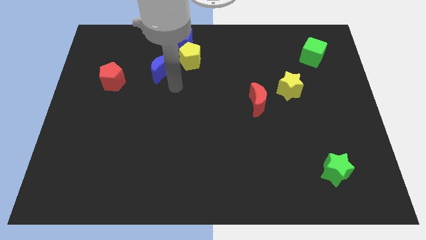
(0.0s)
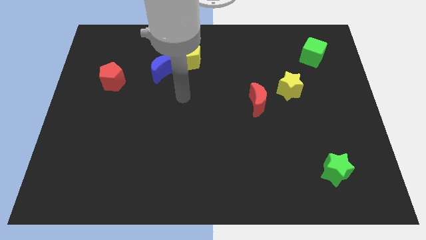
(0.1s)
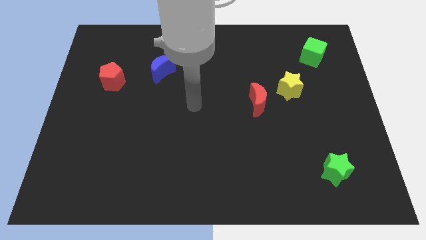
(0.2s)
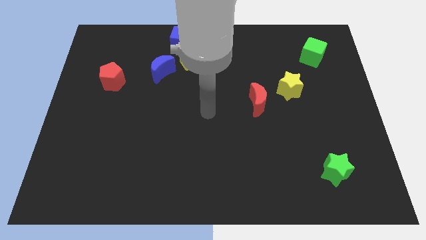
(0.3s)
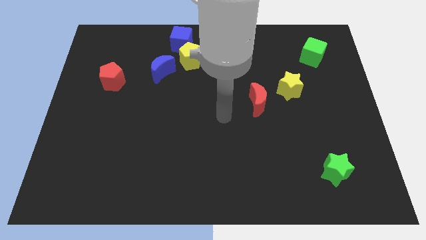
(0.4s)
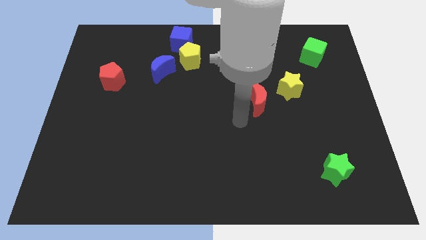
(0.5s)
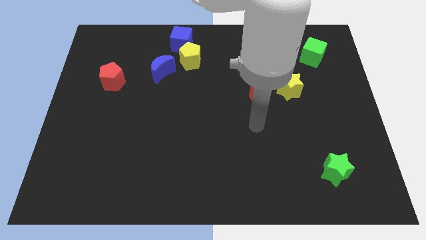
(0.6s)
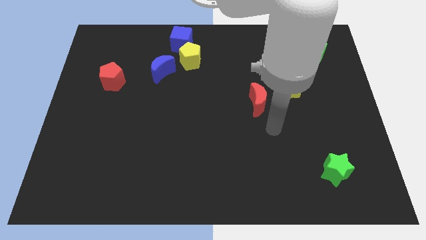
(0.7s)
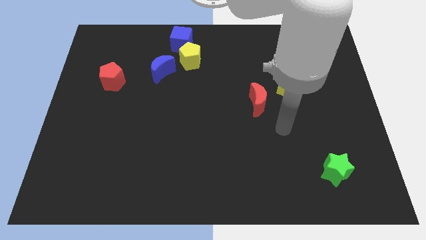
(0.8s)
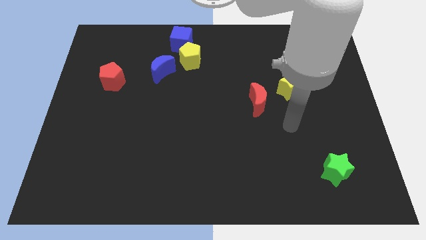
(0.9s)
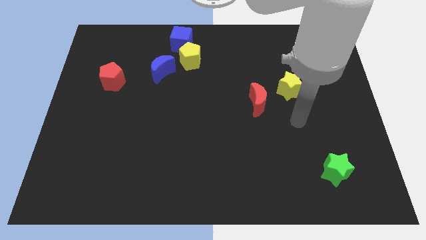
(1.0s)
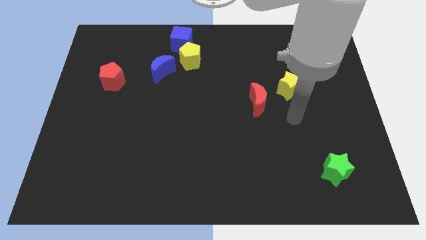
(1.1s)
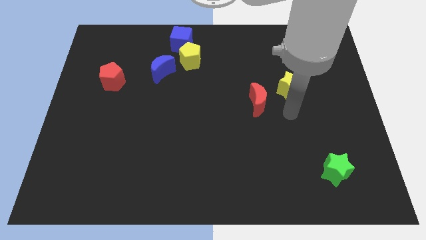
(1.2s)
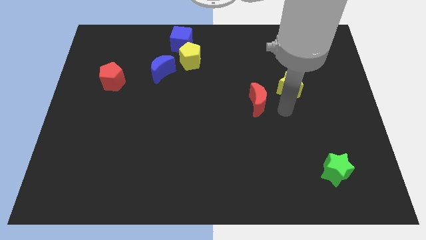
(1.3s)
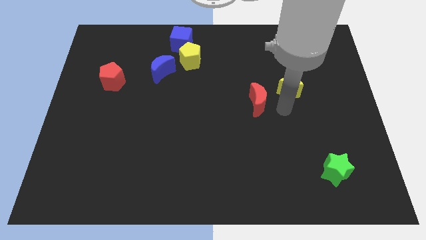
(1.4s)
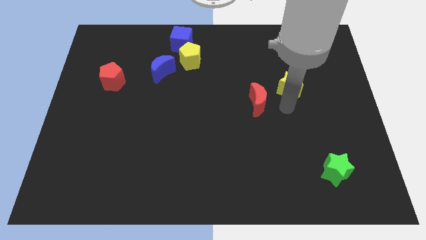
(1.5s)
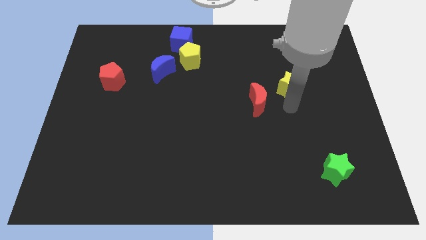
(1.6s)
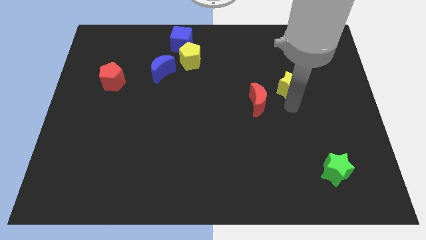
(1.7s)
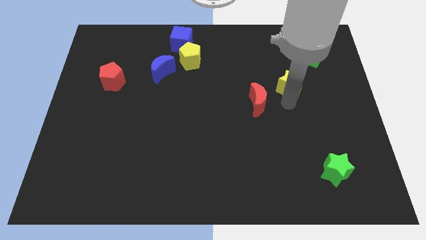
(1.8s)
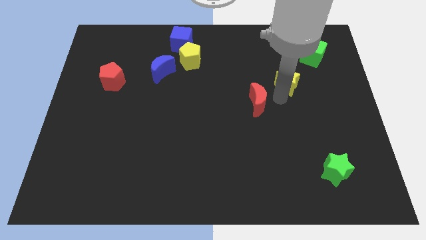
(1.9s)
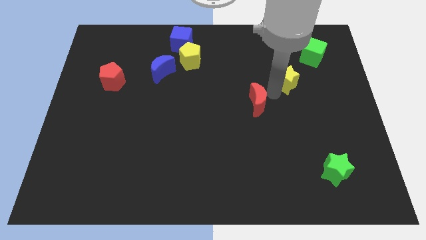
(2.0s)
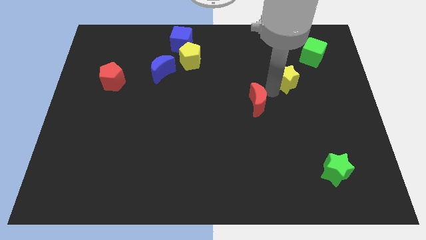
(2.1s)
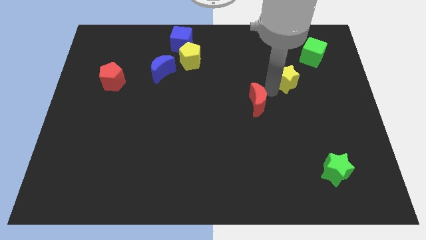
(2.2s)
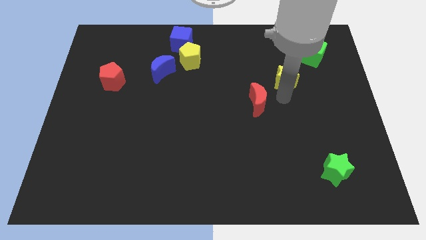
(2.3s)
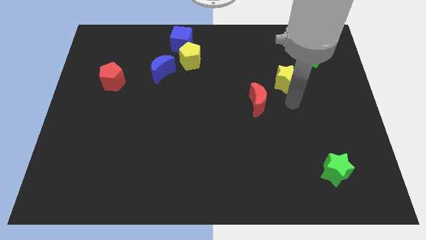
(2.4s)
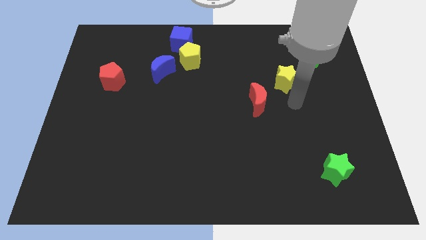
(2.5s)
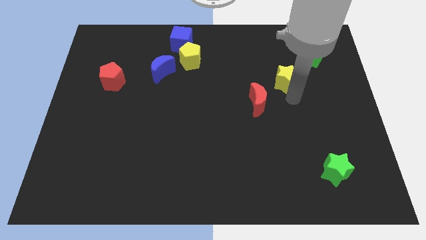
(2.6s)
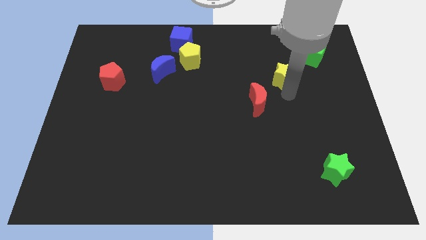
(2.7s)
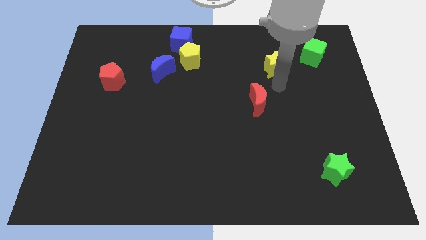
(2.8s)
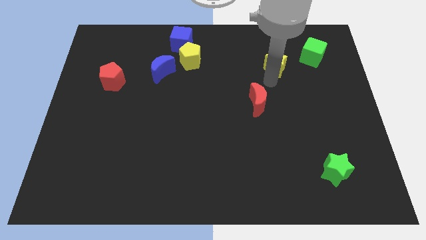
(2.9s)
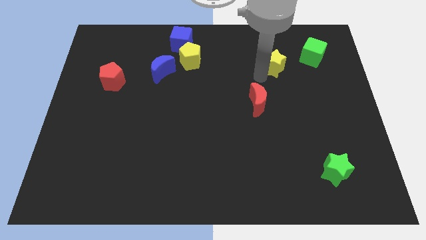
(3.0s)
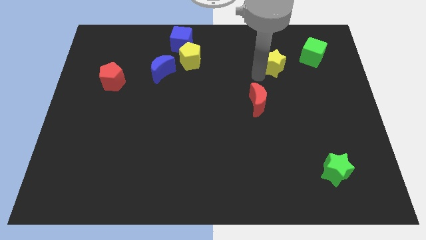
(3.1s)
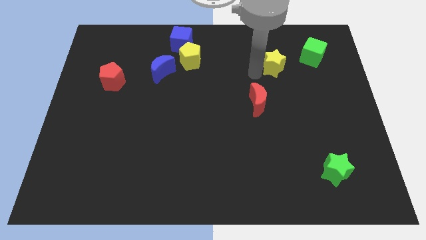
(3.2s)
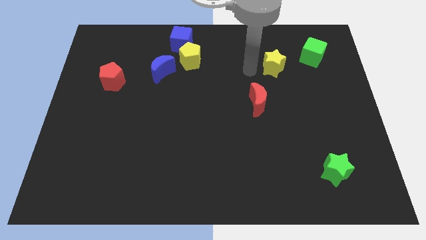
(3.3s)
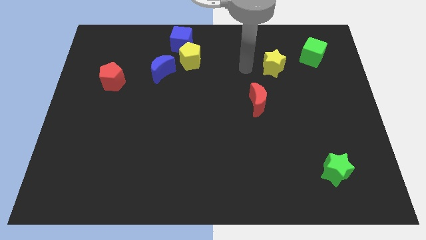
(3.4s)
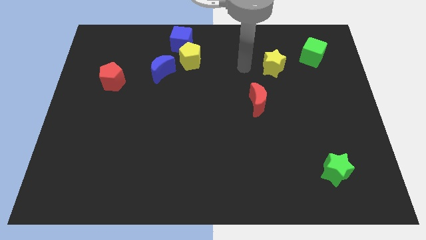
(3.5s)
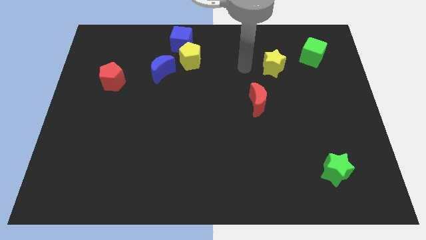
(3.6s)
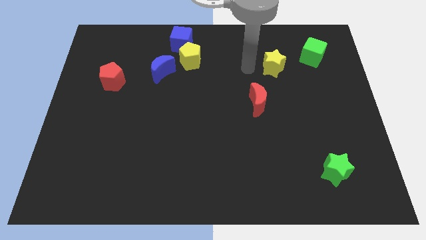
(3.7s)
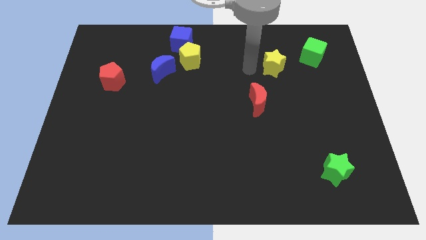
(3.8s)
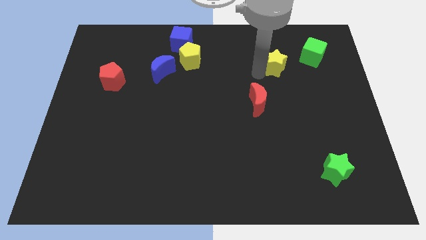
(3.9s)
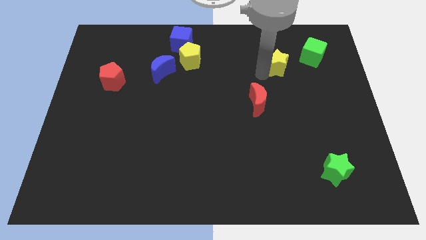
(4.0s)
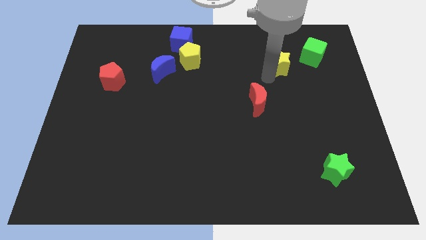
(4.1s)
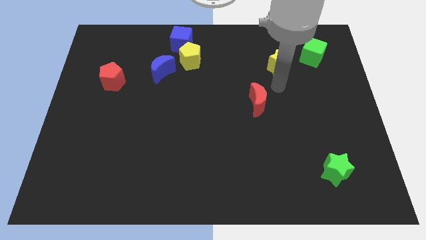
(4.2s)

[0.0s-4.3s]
slightly push the yellow star towards the top of the board

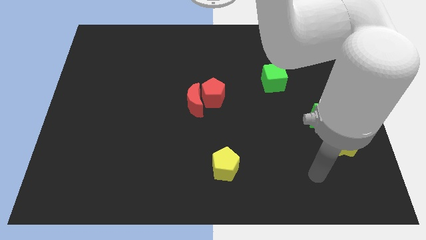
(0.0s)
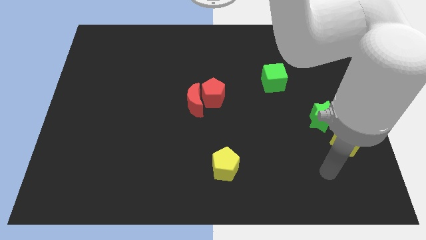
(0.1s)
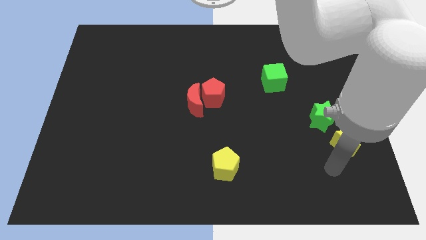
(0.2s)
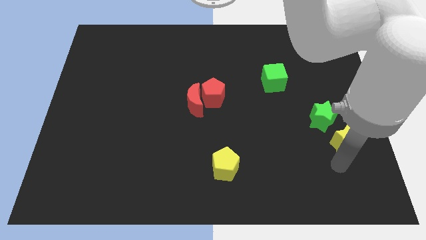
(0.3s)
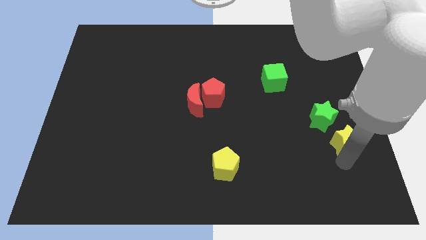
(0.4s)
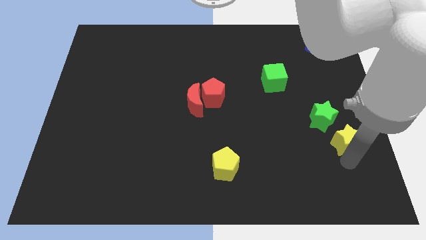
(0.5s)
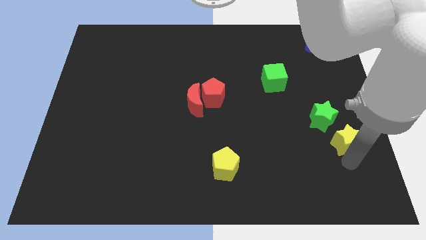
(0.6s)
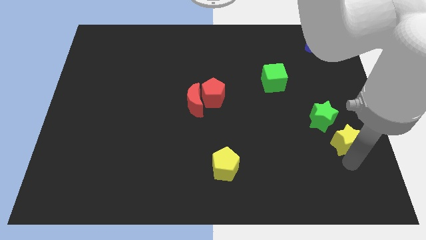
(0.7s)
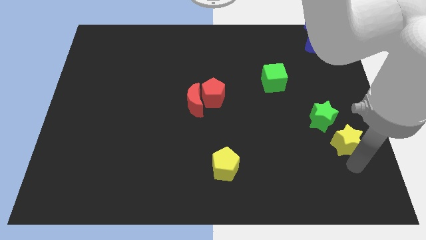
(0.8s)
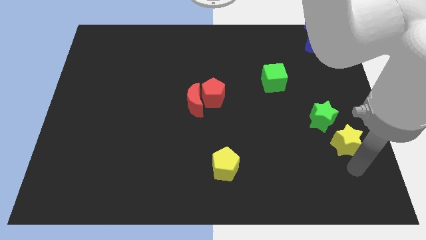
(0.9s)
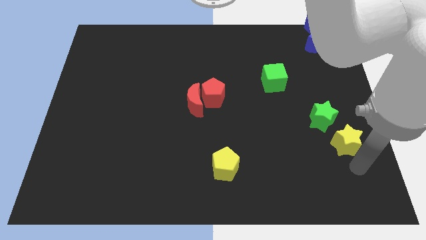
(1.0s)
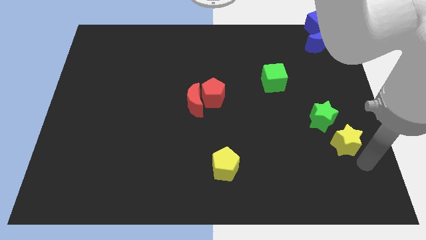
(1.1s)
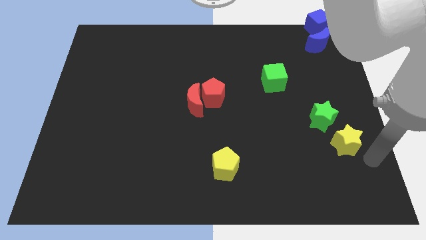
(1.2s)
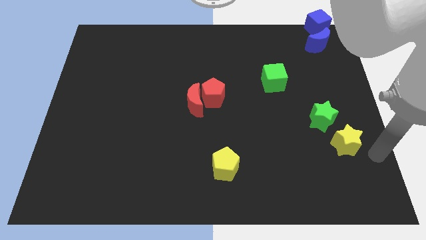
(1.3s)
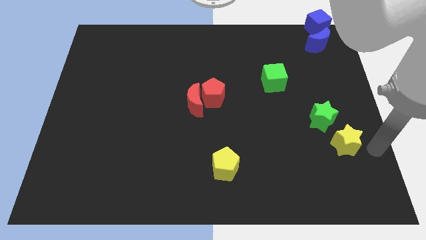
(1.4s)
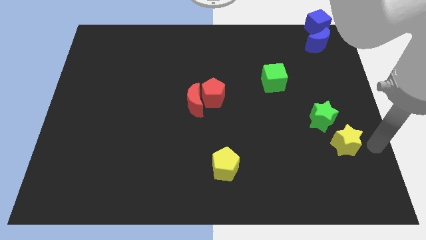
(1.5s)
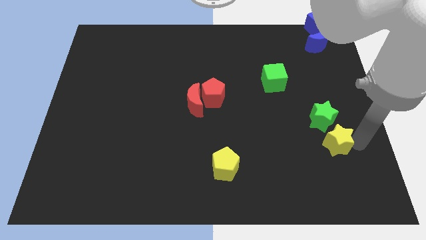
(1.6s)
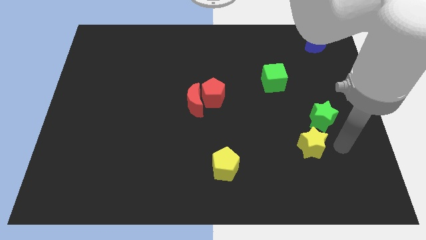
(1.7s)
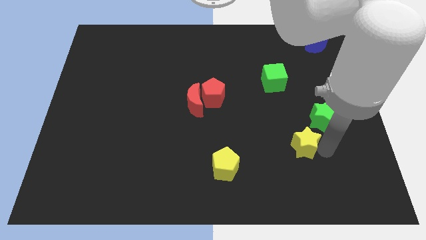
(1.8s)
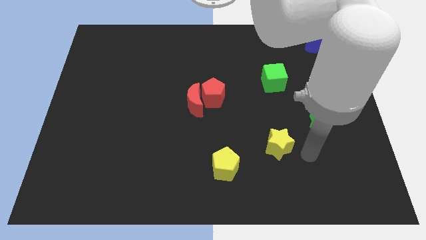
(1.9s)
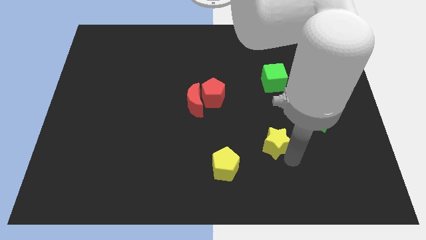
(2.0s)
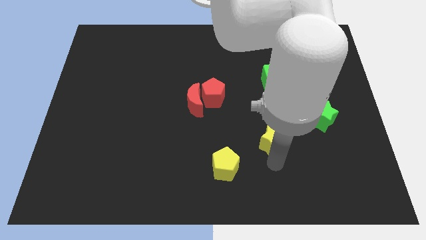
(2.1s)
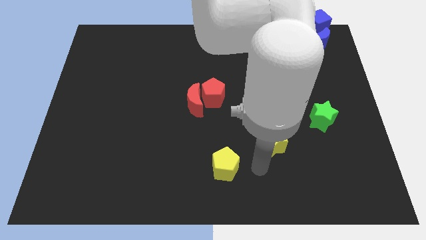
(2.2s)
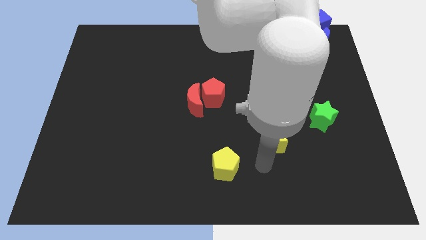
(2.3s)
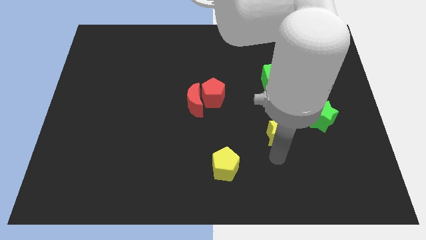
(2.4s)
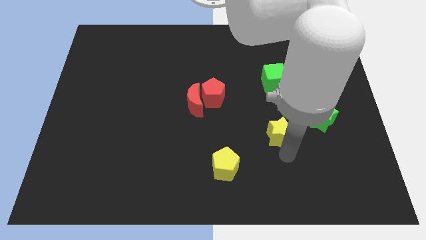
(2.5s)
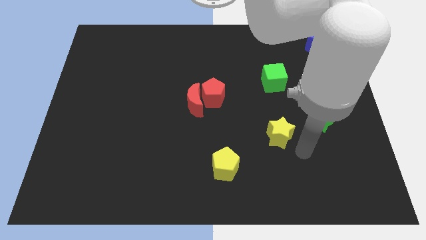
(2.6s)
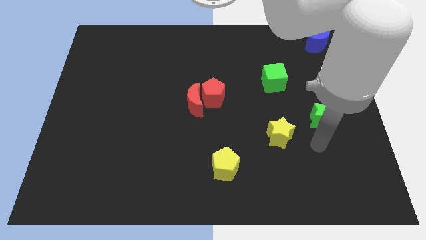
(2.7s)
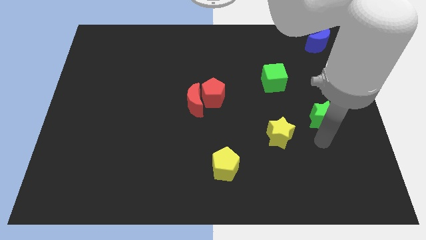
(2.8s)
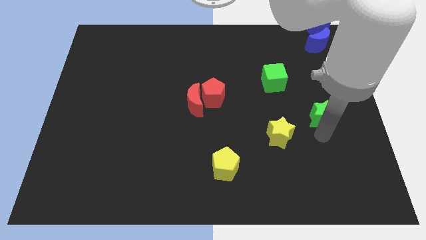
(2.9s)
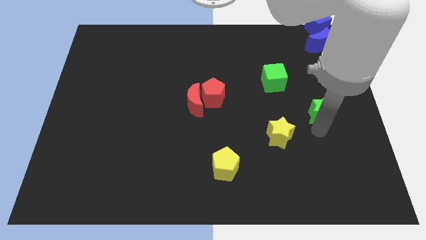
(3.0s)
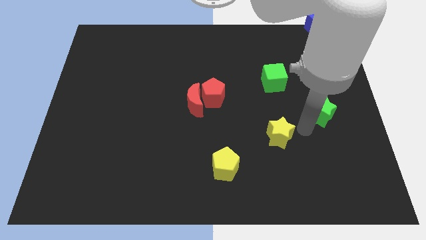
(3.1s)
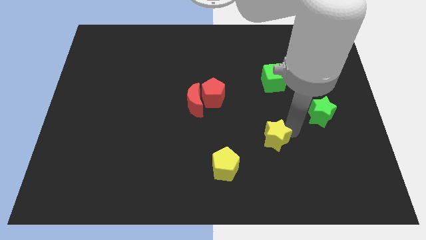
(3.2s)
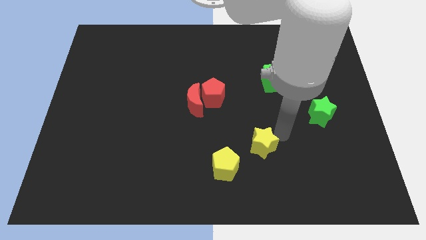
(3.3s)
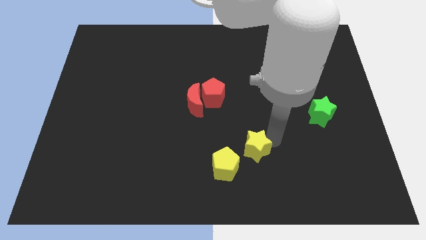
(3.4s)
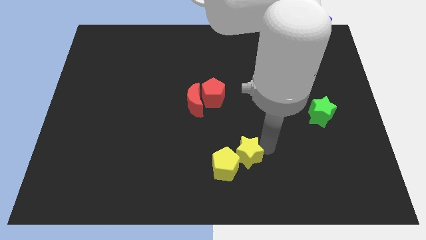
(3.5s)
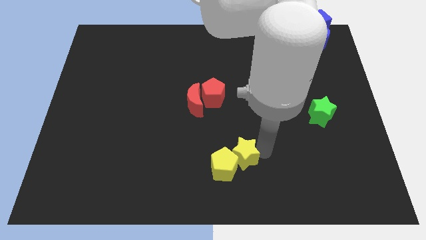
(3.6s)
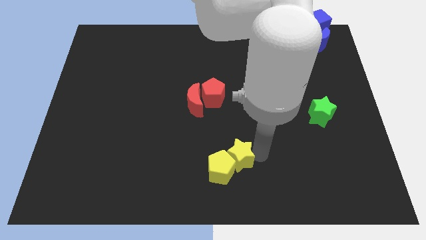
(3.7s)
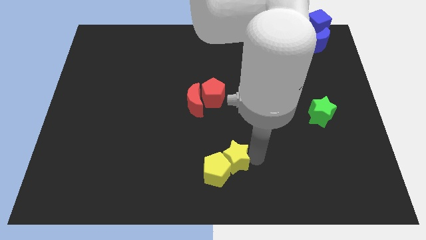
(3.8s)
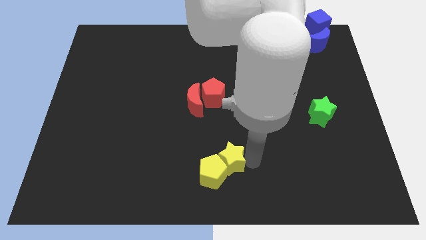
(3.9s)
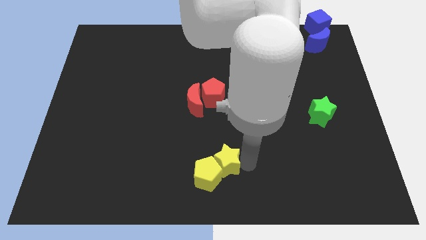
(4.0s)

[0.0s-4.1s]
push yellow star into yellow pentagon

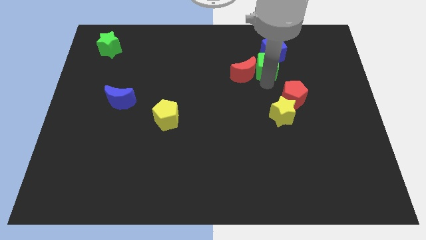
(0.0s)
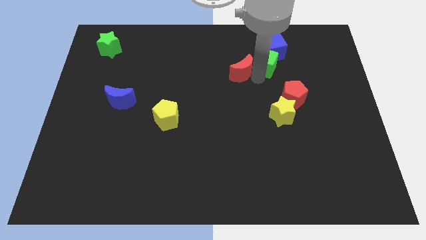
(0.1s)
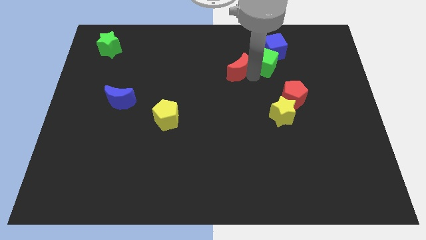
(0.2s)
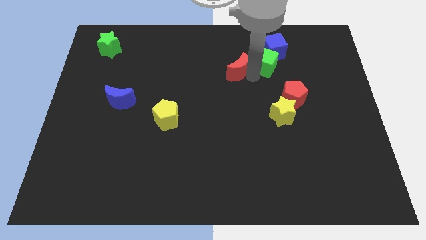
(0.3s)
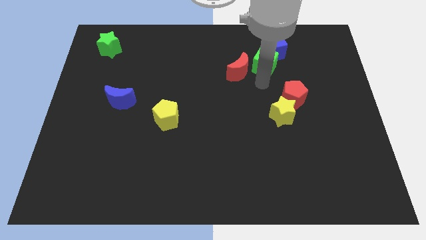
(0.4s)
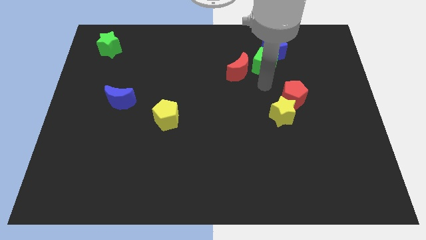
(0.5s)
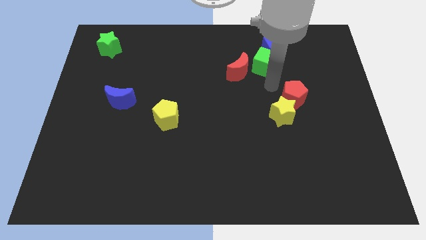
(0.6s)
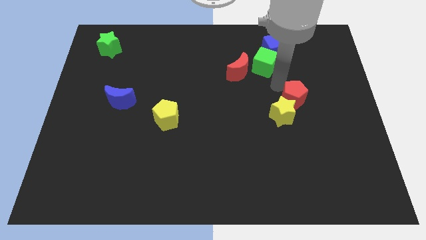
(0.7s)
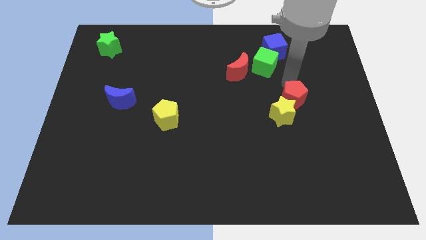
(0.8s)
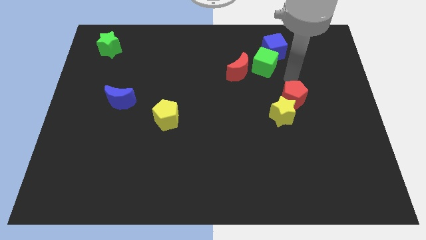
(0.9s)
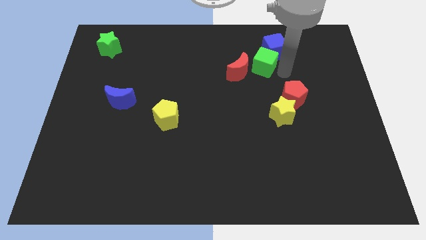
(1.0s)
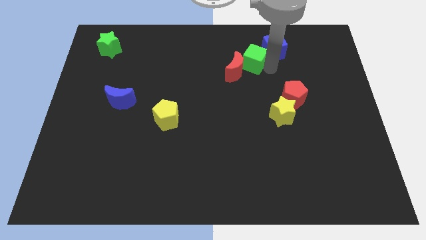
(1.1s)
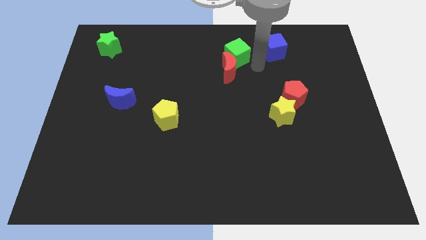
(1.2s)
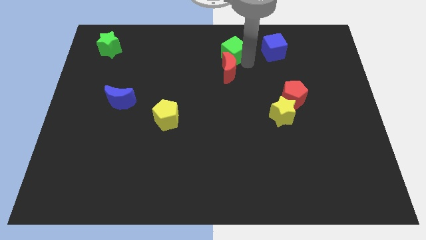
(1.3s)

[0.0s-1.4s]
place green cube to the left of blue cube
